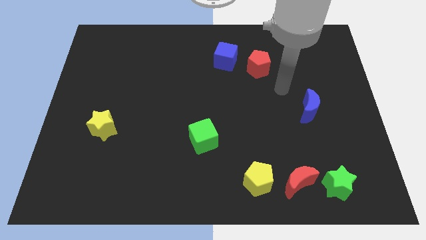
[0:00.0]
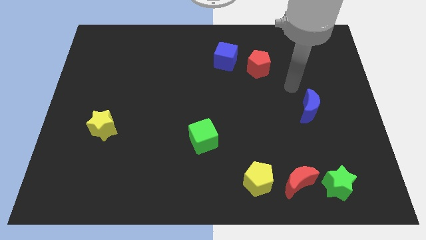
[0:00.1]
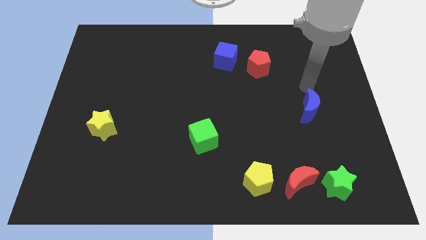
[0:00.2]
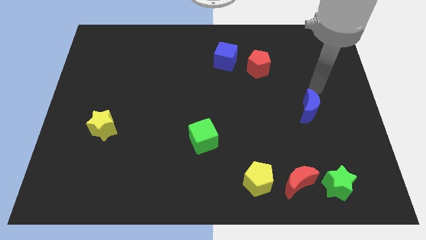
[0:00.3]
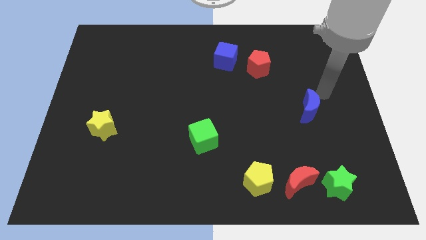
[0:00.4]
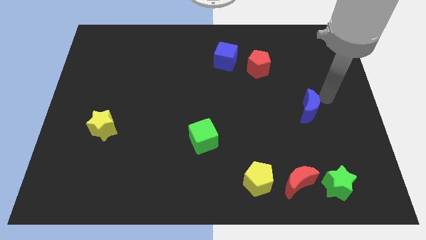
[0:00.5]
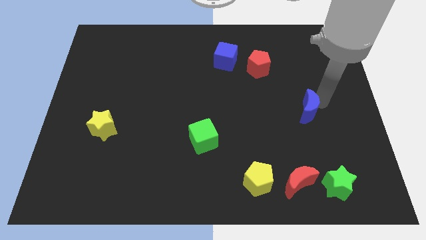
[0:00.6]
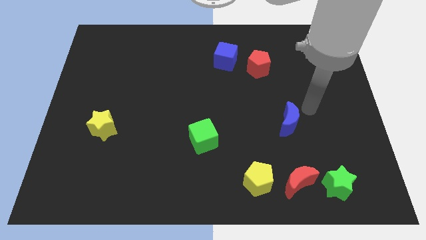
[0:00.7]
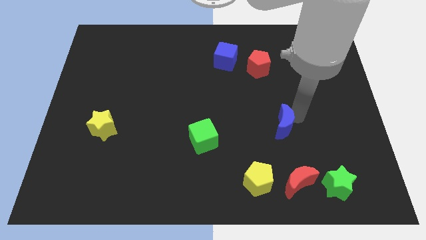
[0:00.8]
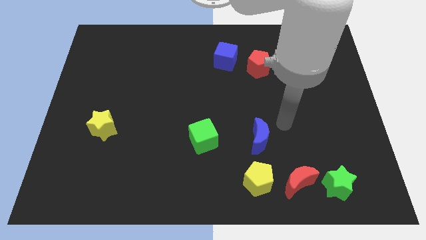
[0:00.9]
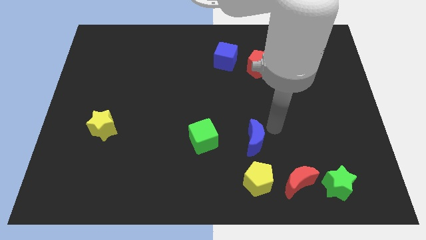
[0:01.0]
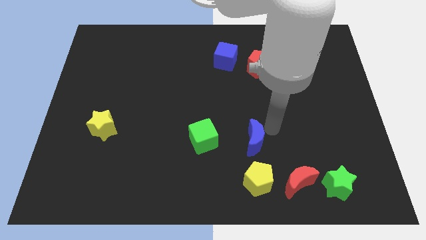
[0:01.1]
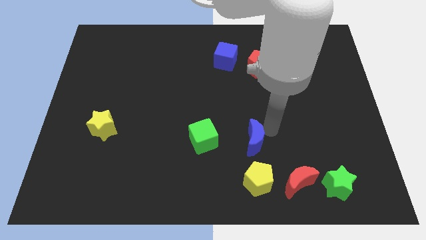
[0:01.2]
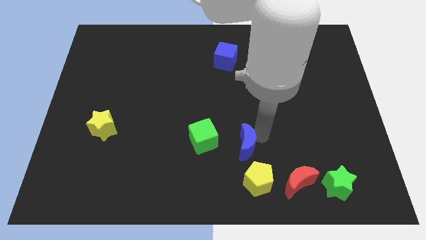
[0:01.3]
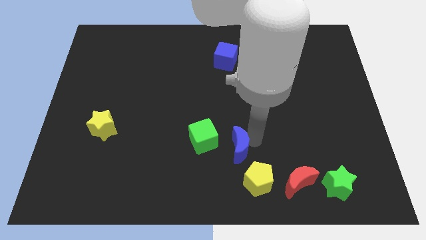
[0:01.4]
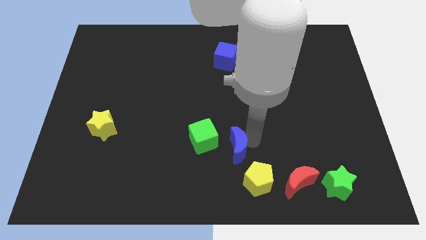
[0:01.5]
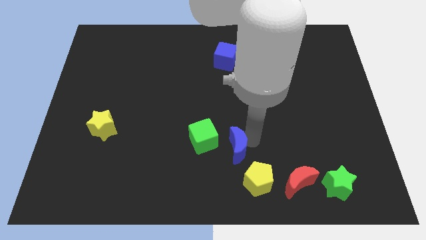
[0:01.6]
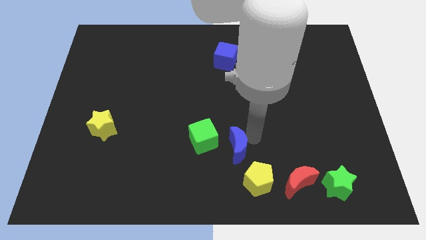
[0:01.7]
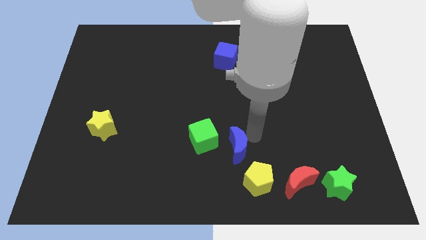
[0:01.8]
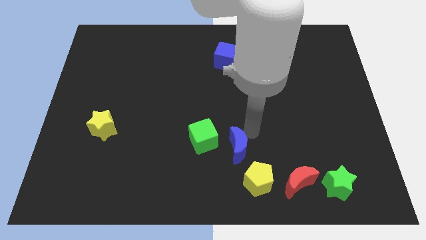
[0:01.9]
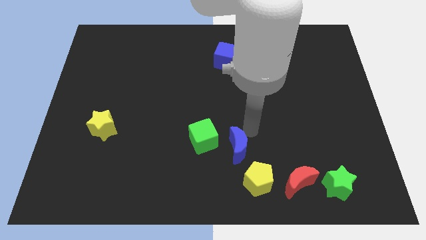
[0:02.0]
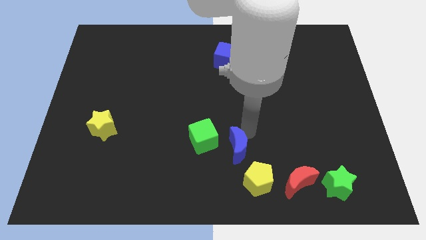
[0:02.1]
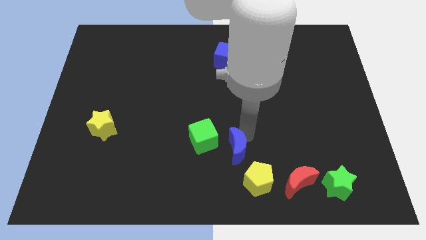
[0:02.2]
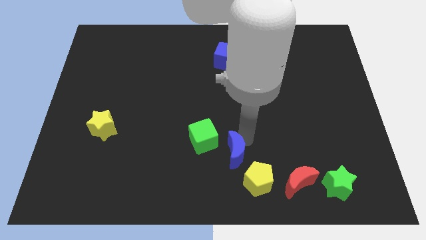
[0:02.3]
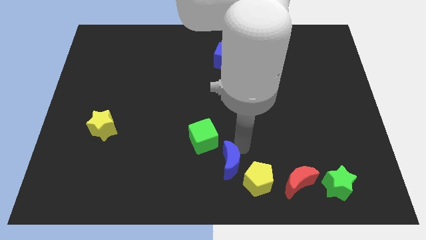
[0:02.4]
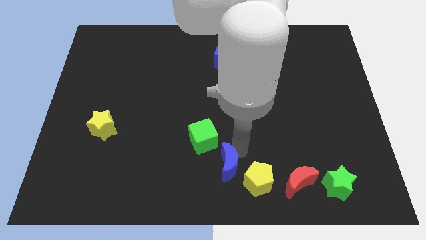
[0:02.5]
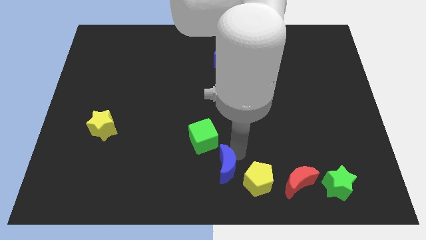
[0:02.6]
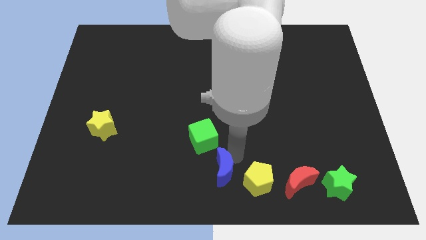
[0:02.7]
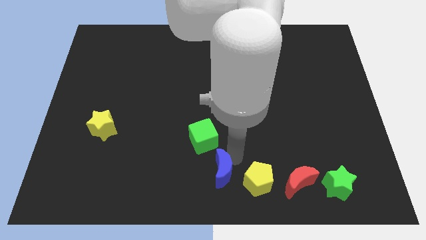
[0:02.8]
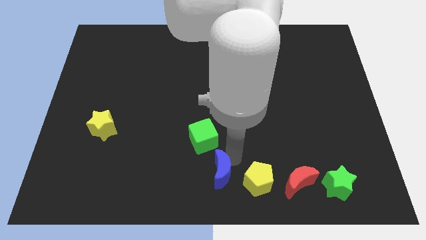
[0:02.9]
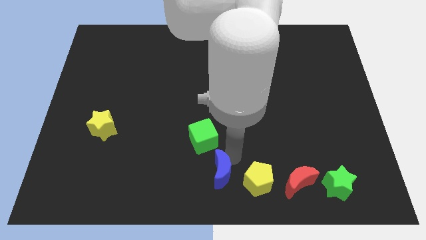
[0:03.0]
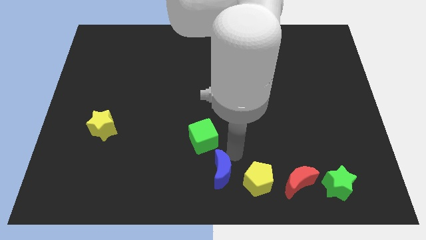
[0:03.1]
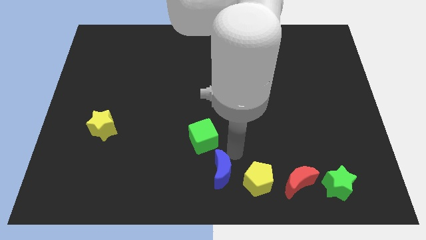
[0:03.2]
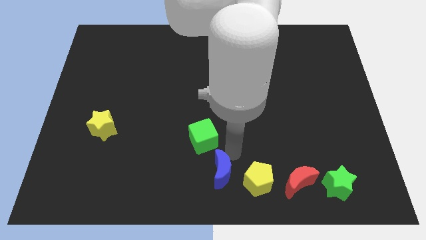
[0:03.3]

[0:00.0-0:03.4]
move blue moon to the left of yellow pentagon

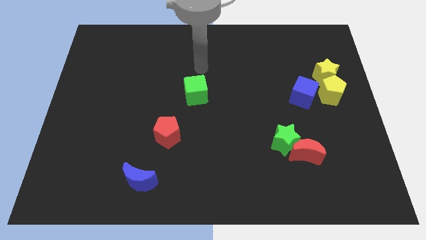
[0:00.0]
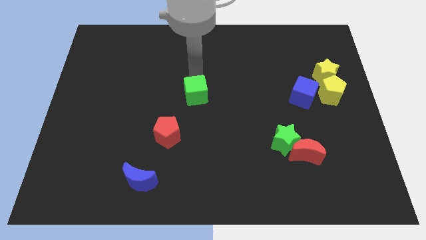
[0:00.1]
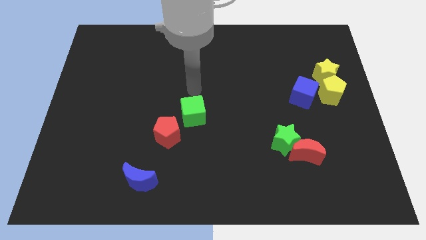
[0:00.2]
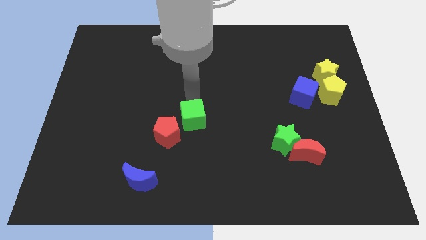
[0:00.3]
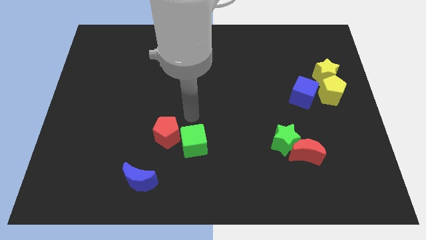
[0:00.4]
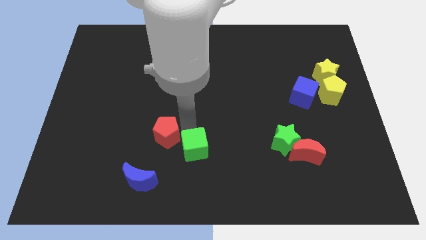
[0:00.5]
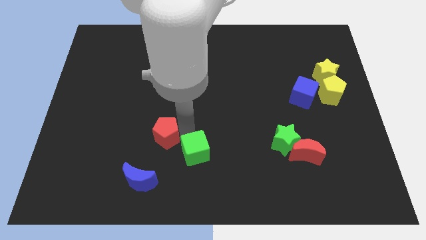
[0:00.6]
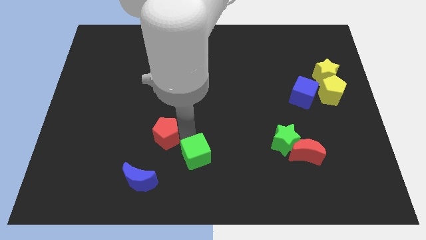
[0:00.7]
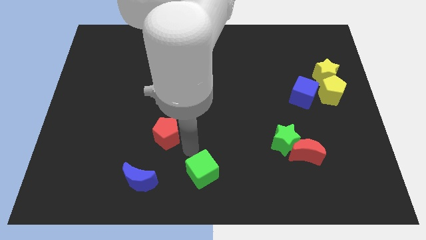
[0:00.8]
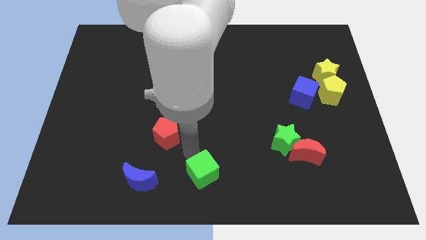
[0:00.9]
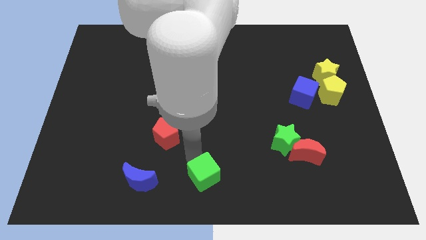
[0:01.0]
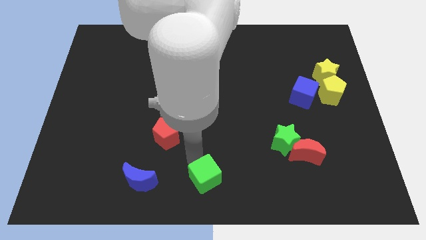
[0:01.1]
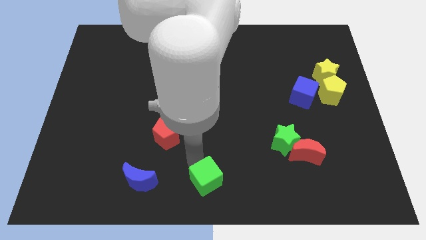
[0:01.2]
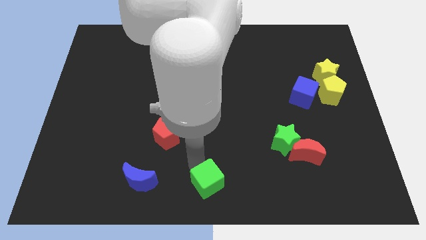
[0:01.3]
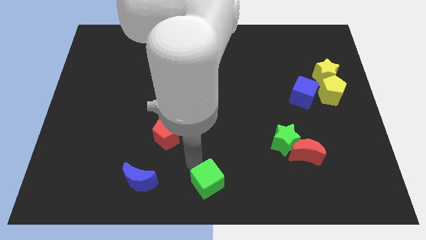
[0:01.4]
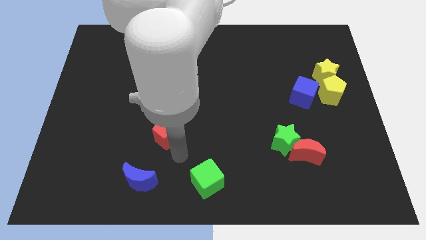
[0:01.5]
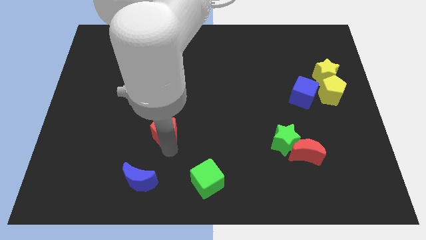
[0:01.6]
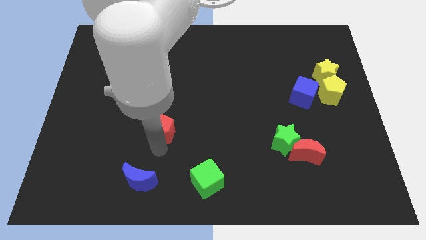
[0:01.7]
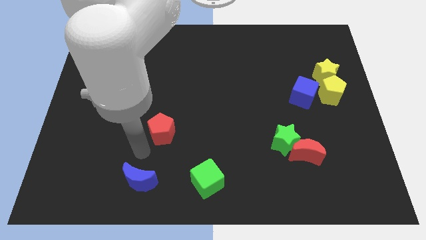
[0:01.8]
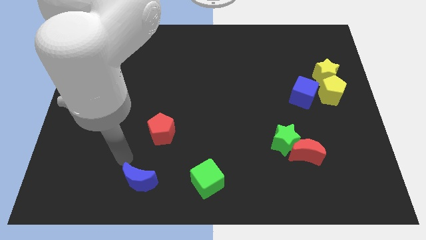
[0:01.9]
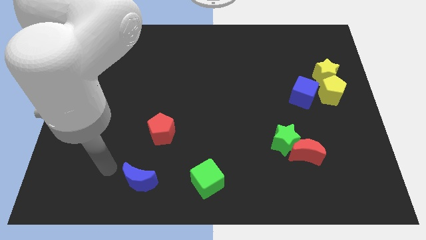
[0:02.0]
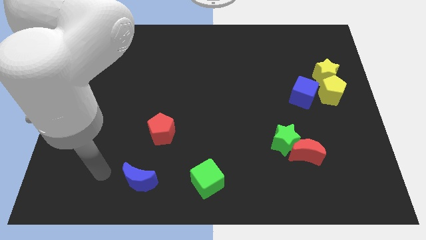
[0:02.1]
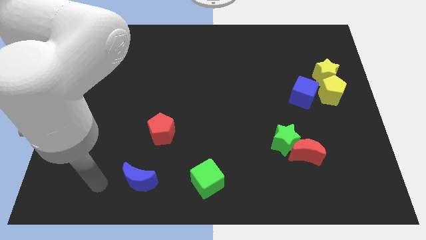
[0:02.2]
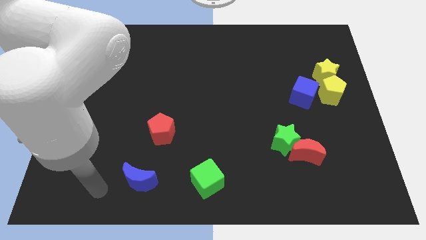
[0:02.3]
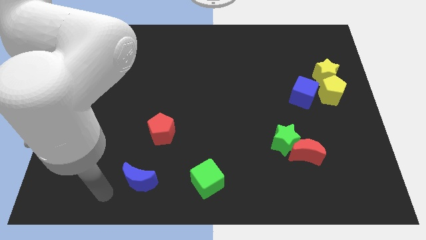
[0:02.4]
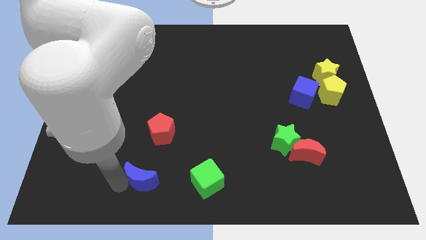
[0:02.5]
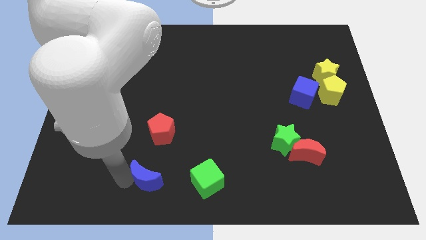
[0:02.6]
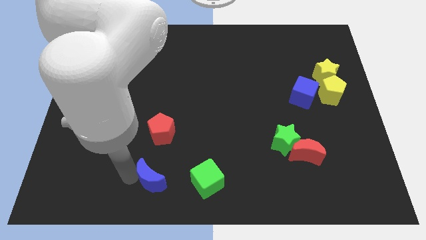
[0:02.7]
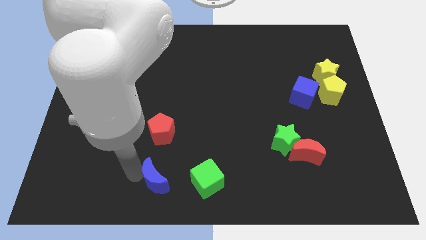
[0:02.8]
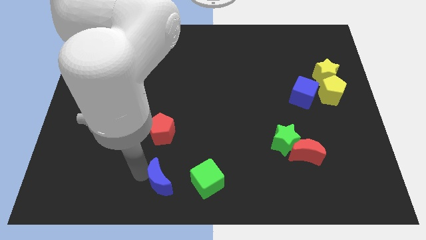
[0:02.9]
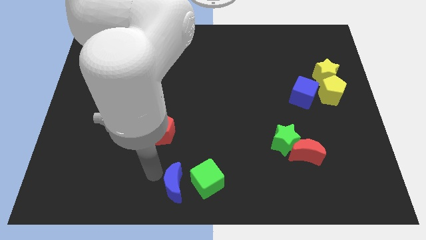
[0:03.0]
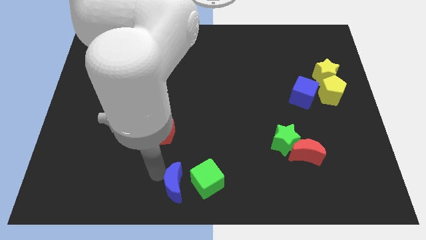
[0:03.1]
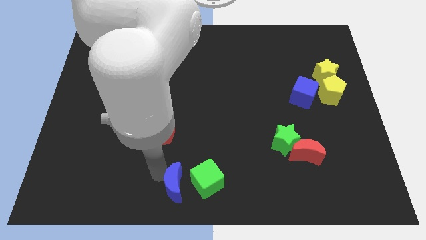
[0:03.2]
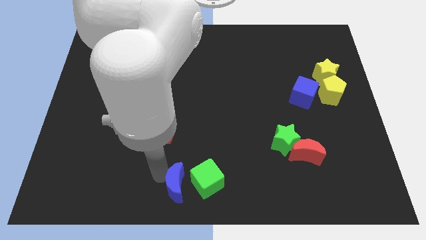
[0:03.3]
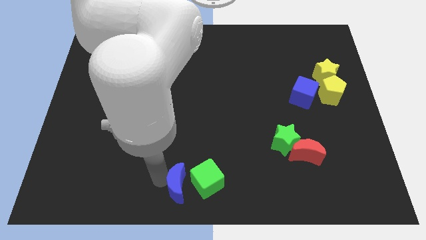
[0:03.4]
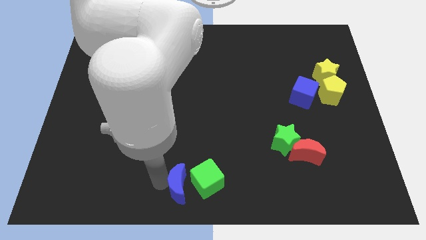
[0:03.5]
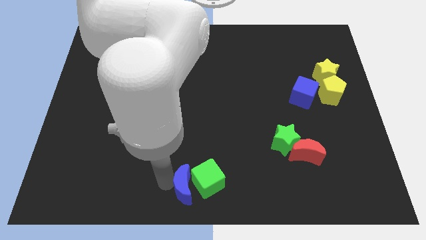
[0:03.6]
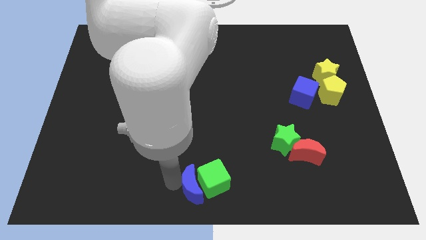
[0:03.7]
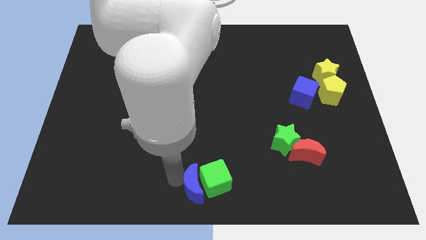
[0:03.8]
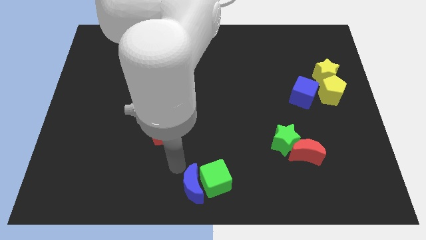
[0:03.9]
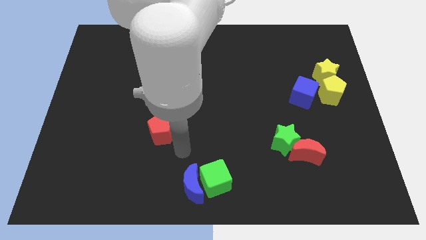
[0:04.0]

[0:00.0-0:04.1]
place the green cube and blue crescent to the bottom center of the board

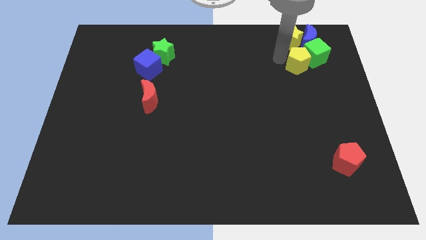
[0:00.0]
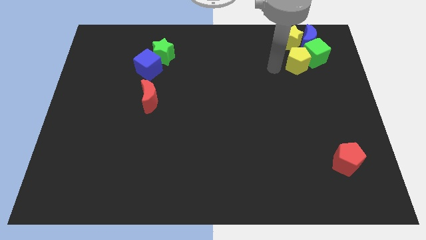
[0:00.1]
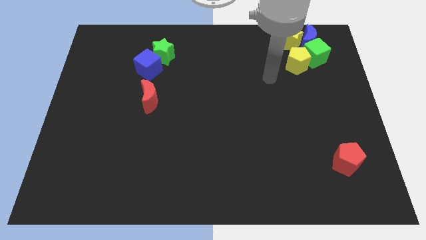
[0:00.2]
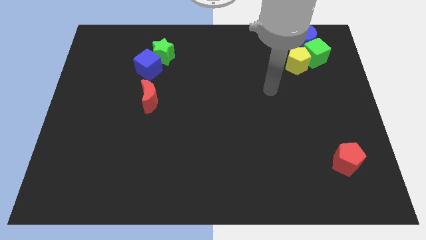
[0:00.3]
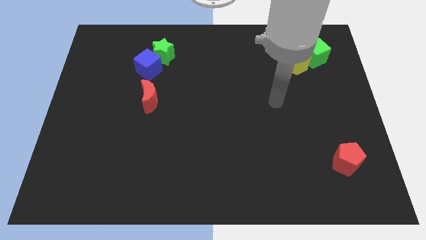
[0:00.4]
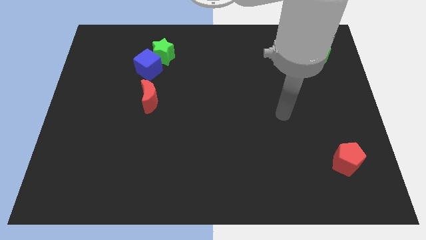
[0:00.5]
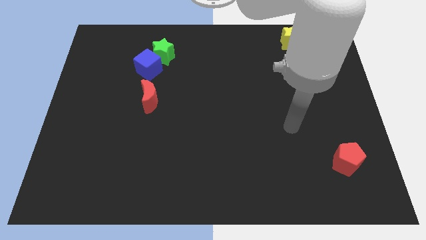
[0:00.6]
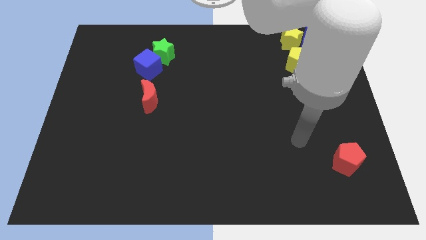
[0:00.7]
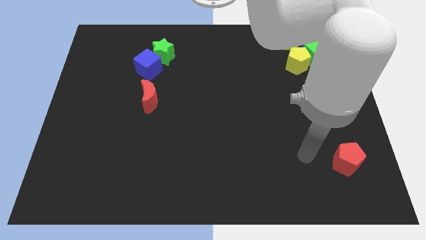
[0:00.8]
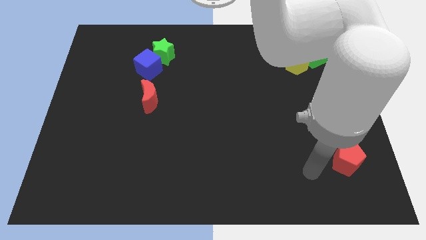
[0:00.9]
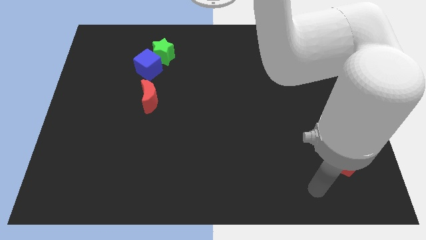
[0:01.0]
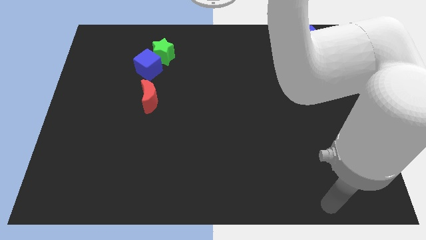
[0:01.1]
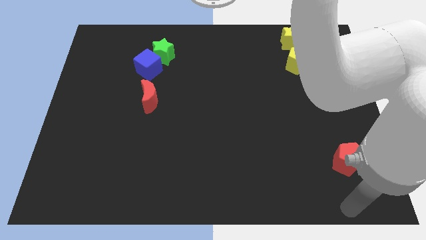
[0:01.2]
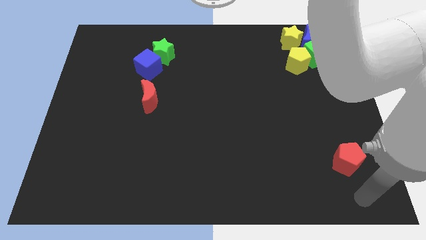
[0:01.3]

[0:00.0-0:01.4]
point your arm below the red pentagon

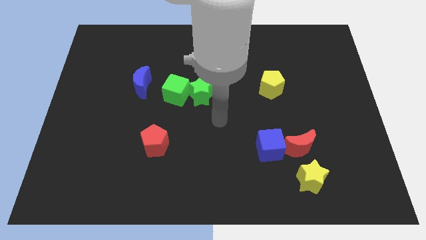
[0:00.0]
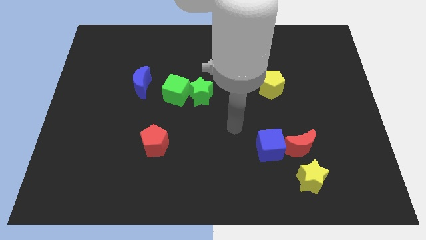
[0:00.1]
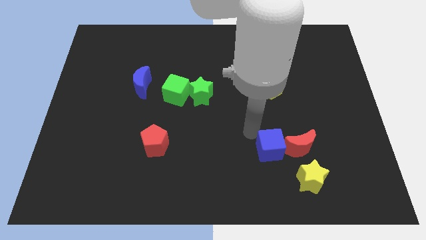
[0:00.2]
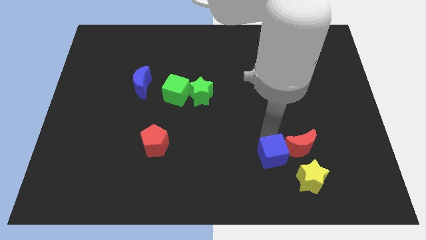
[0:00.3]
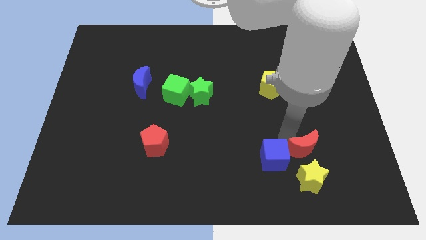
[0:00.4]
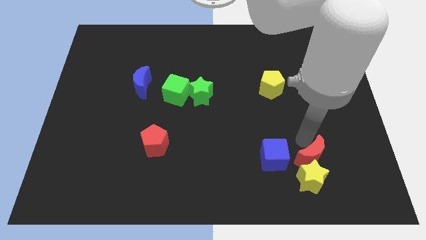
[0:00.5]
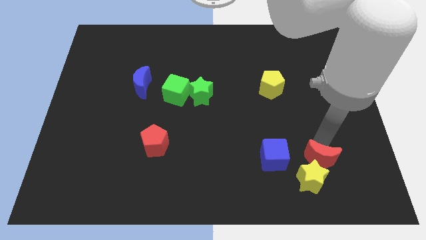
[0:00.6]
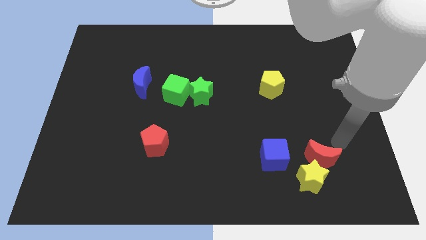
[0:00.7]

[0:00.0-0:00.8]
place red moon to the top of yellow star
